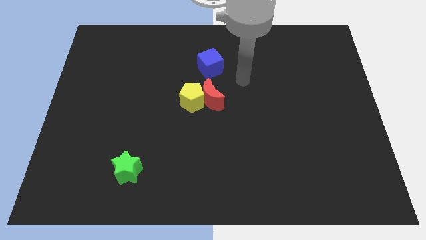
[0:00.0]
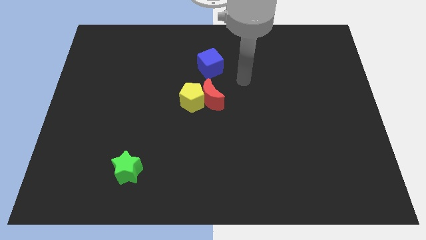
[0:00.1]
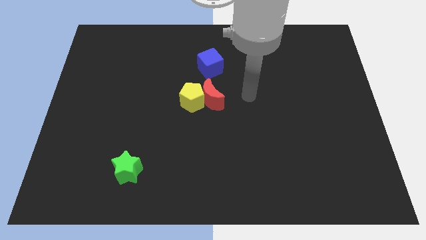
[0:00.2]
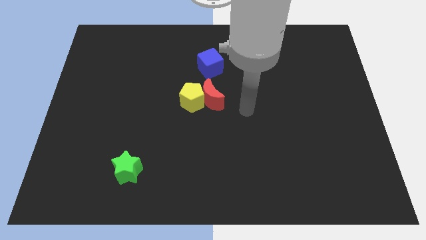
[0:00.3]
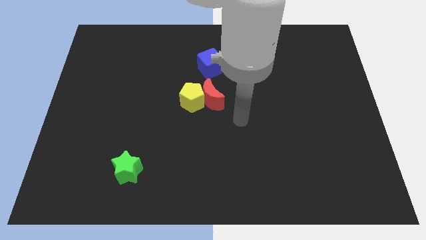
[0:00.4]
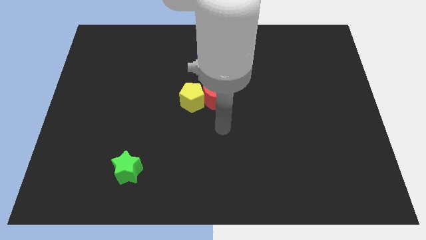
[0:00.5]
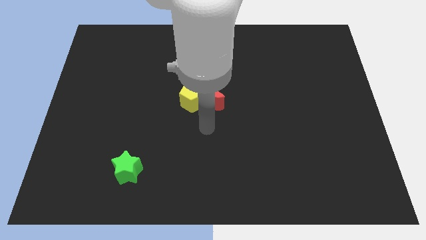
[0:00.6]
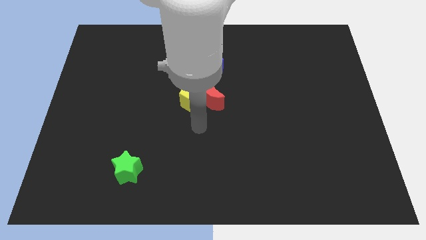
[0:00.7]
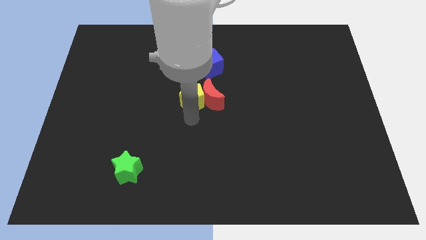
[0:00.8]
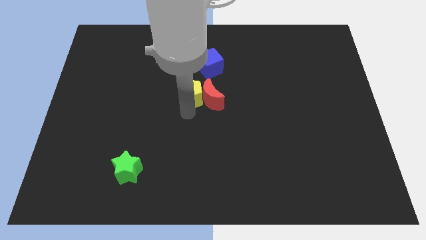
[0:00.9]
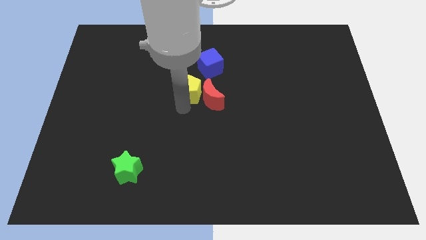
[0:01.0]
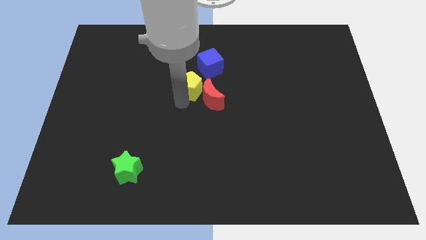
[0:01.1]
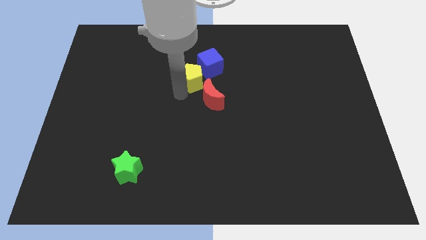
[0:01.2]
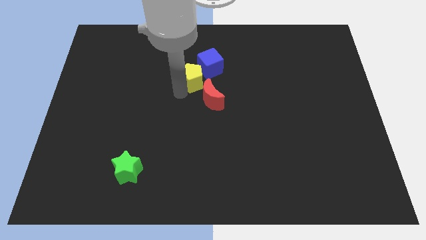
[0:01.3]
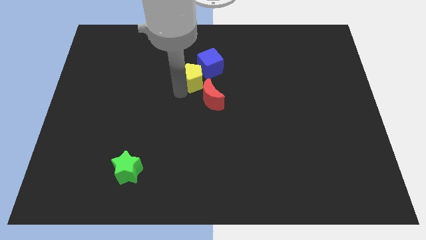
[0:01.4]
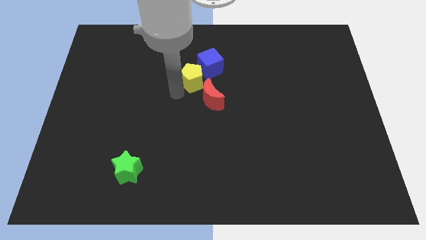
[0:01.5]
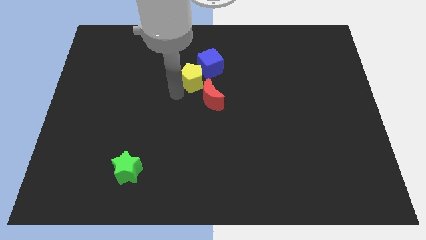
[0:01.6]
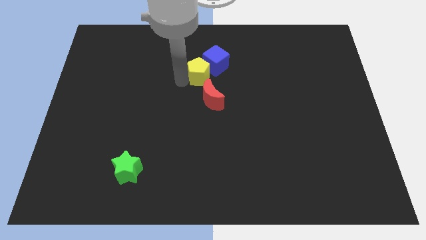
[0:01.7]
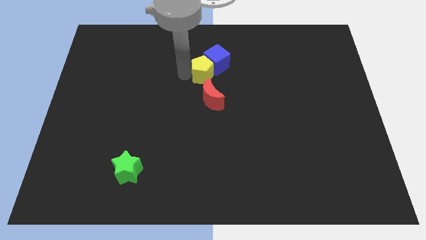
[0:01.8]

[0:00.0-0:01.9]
move the yellow block to the cube

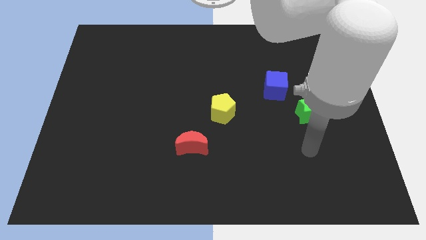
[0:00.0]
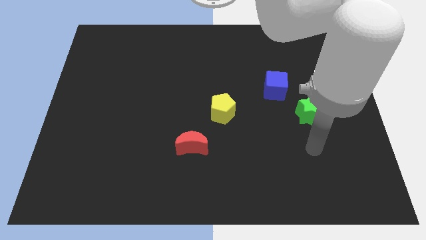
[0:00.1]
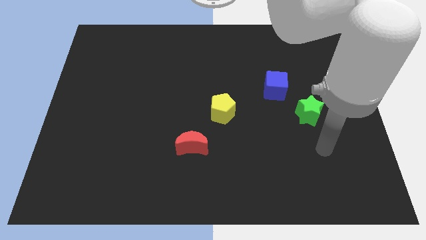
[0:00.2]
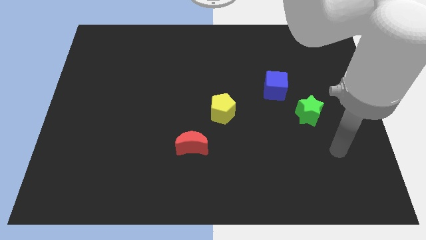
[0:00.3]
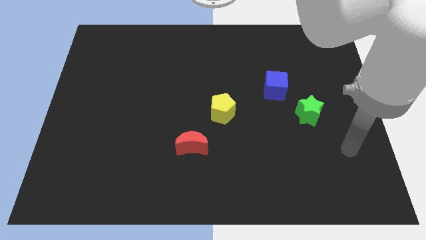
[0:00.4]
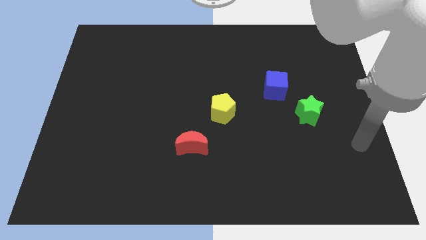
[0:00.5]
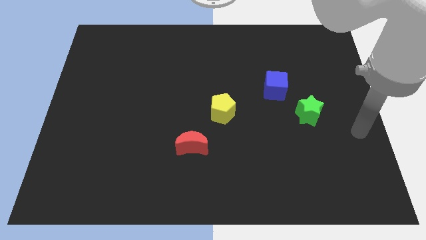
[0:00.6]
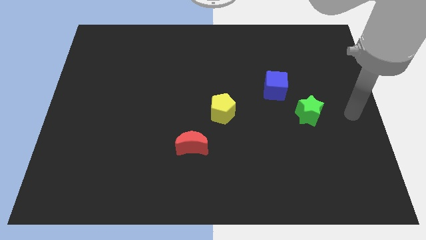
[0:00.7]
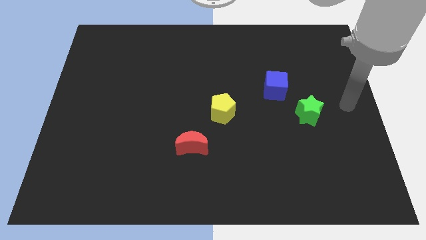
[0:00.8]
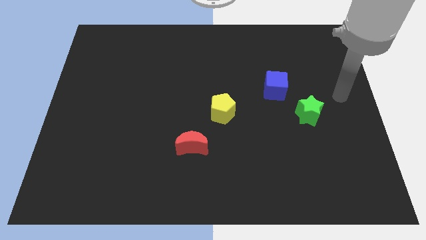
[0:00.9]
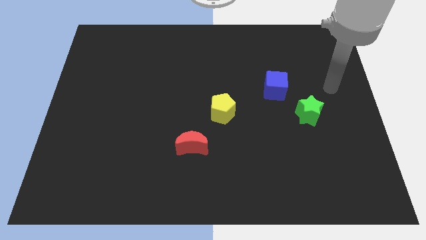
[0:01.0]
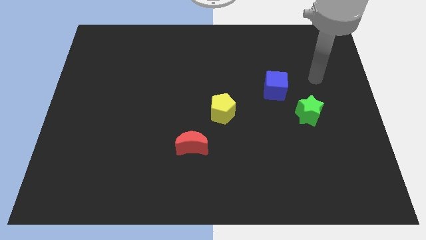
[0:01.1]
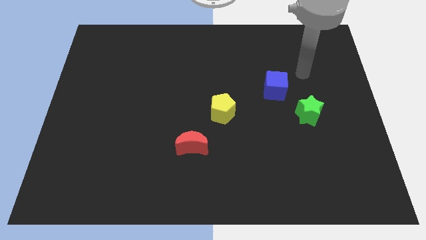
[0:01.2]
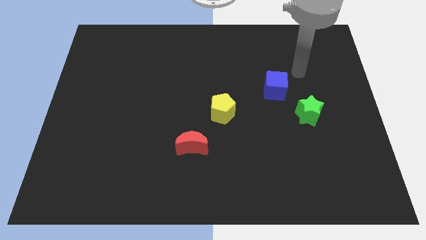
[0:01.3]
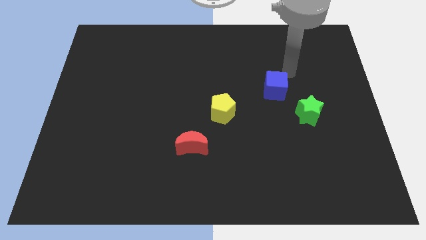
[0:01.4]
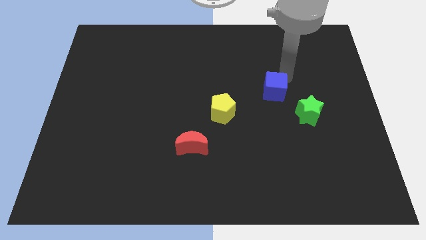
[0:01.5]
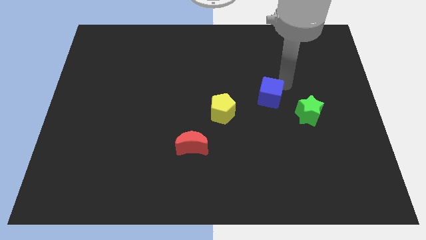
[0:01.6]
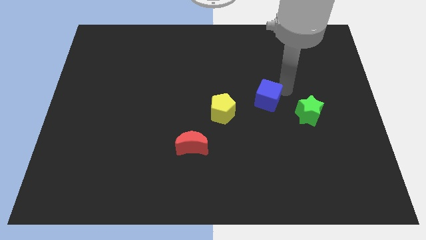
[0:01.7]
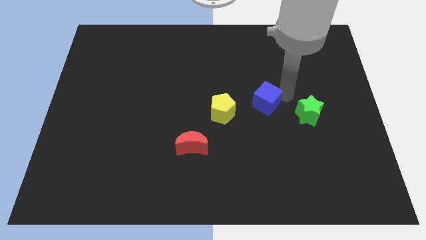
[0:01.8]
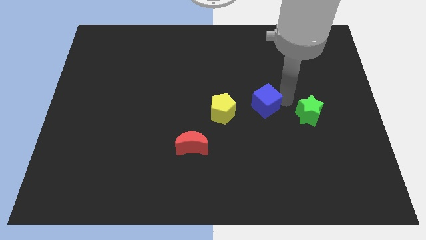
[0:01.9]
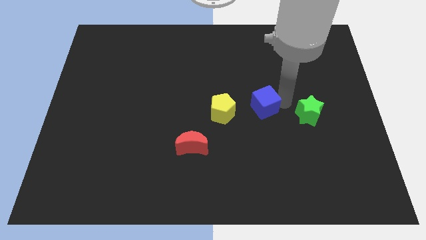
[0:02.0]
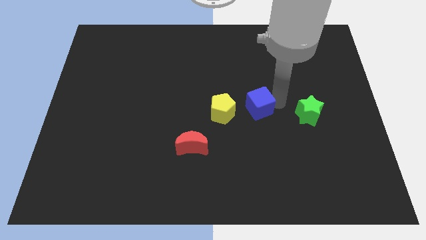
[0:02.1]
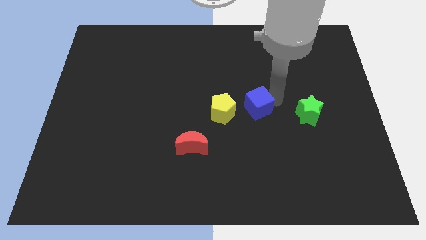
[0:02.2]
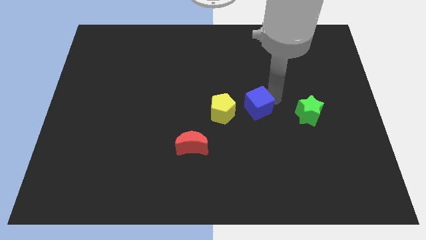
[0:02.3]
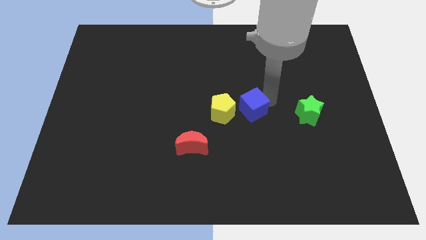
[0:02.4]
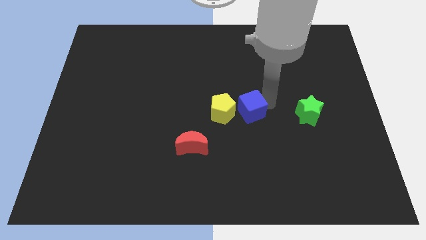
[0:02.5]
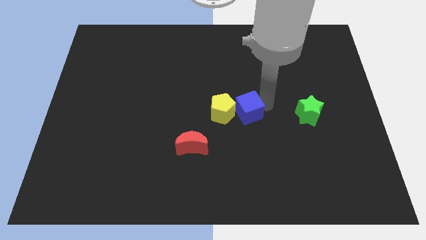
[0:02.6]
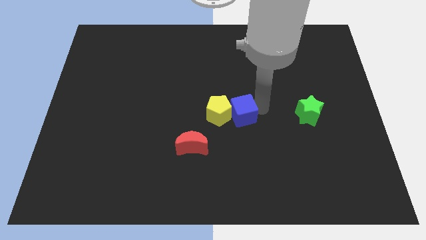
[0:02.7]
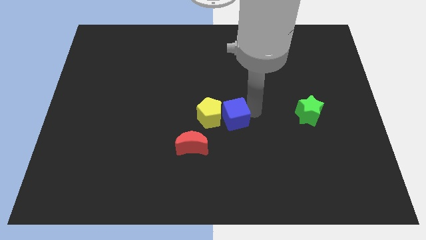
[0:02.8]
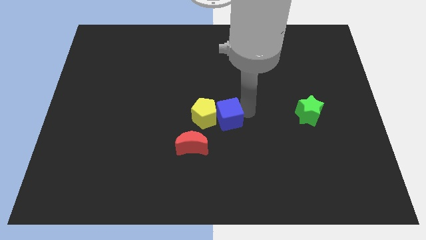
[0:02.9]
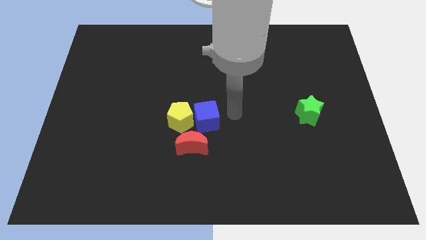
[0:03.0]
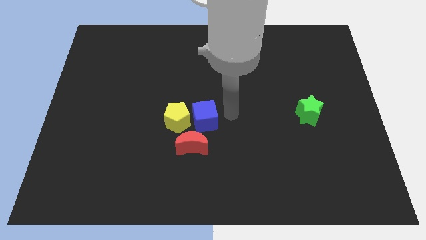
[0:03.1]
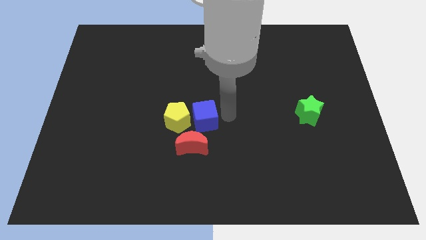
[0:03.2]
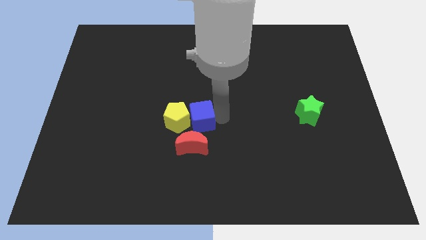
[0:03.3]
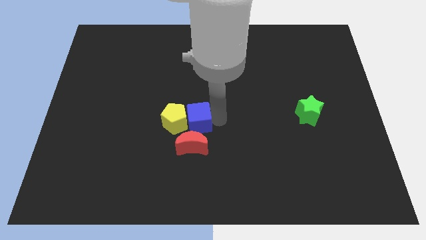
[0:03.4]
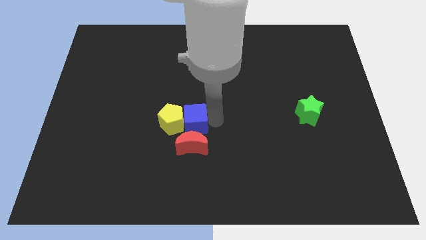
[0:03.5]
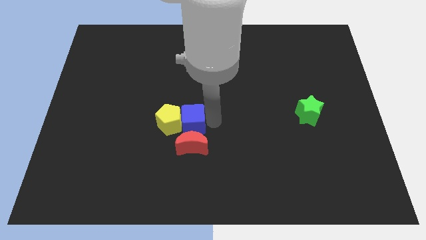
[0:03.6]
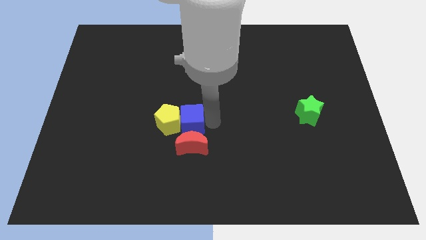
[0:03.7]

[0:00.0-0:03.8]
slide the blue block to the red moon

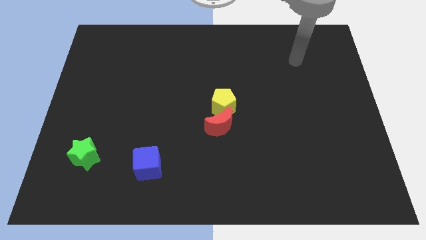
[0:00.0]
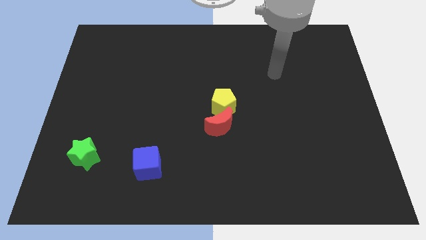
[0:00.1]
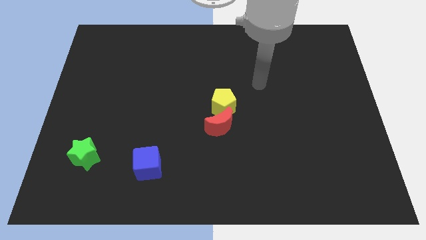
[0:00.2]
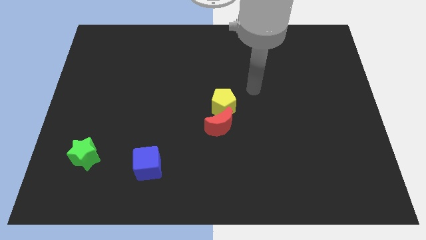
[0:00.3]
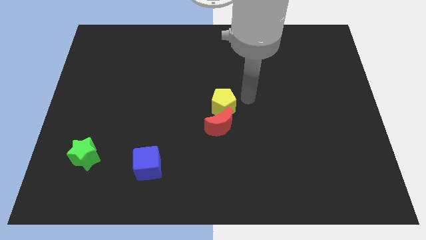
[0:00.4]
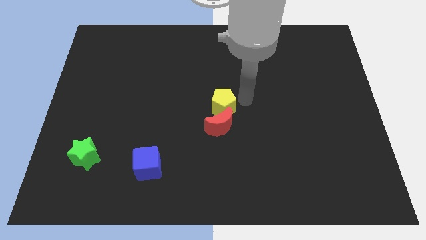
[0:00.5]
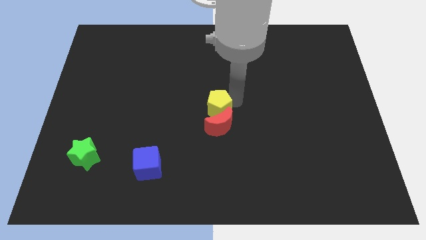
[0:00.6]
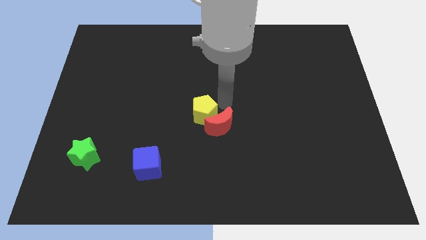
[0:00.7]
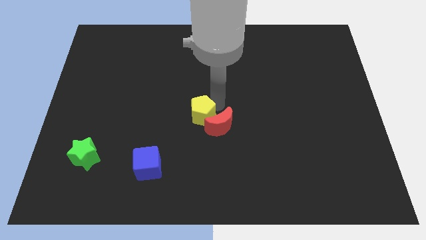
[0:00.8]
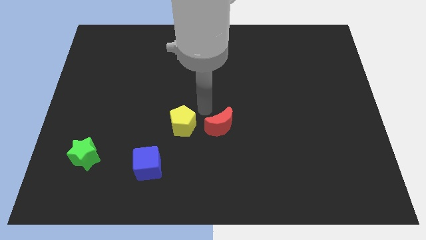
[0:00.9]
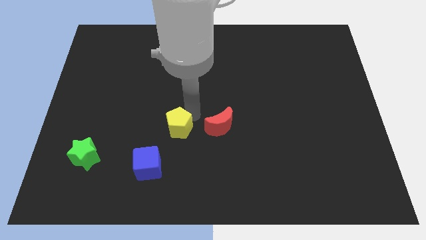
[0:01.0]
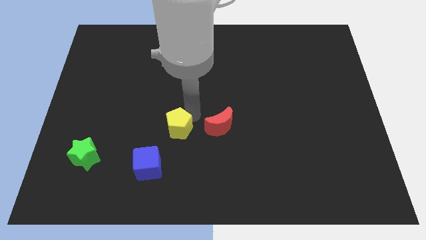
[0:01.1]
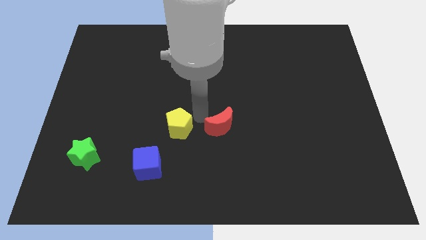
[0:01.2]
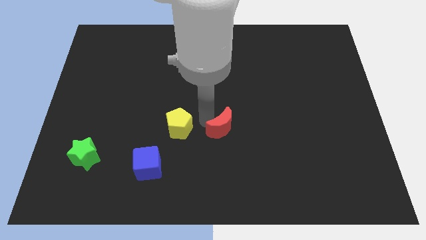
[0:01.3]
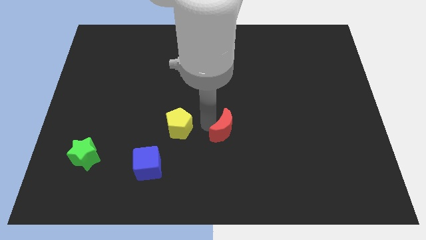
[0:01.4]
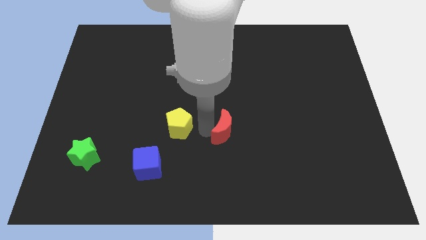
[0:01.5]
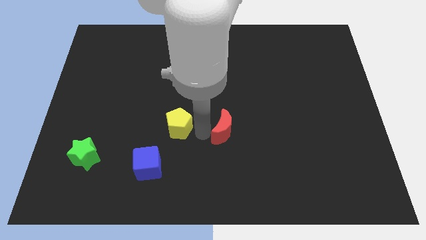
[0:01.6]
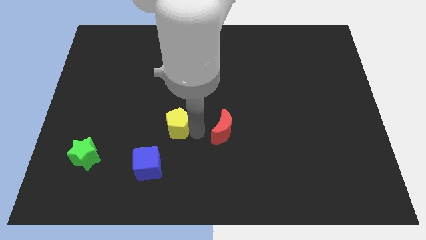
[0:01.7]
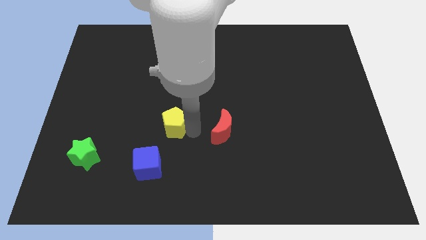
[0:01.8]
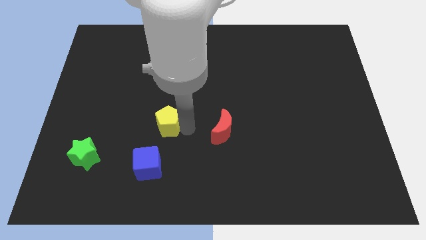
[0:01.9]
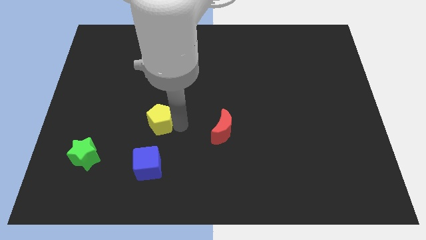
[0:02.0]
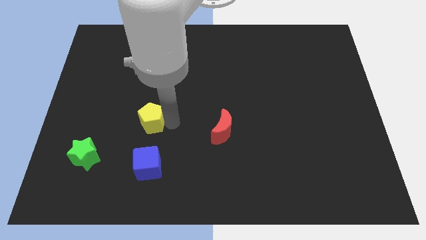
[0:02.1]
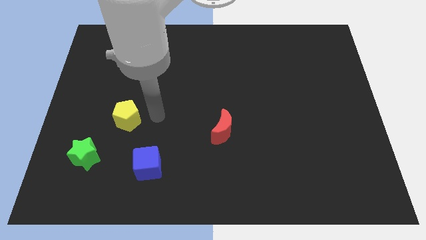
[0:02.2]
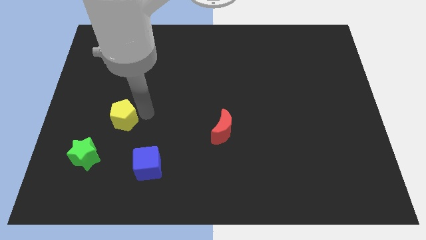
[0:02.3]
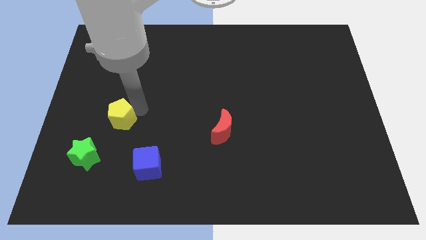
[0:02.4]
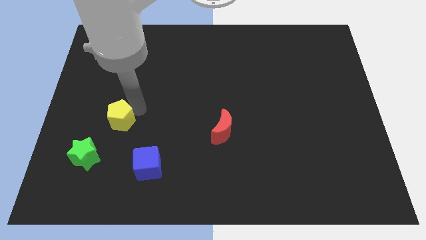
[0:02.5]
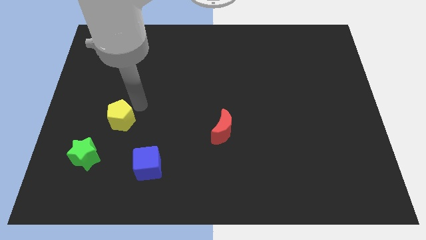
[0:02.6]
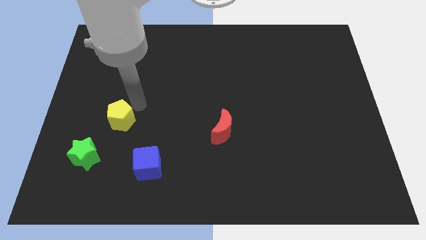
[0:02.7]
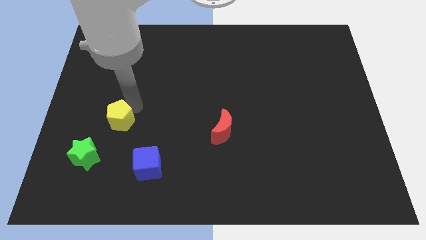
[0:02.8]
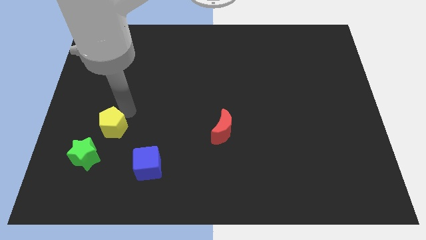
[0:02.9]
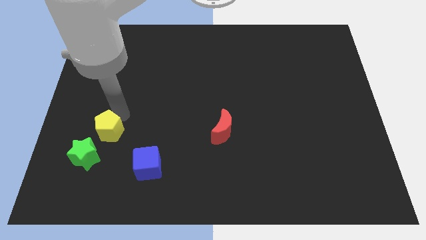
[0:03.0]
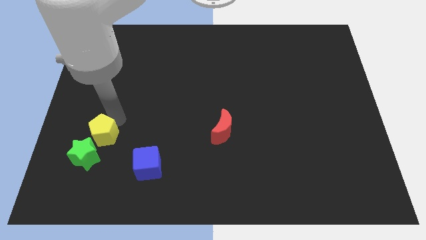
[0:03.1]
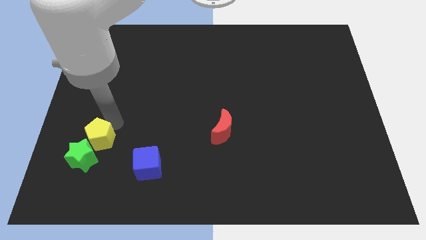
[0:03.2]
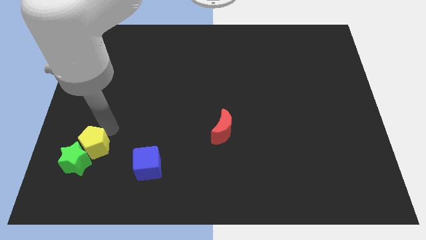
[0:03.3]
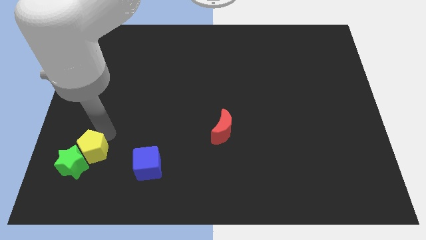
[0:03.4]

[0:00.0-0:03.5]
push the yellow block towards the green block
